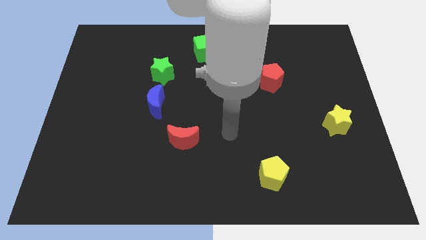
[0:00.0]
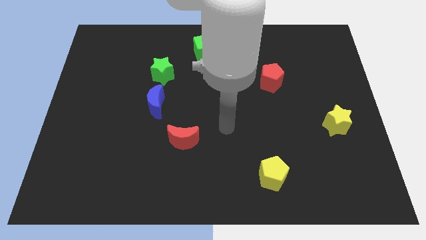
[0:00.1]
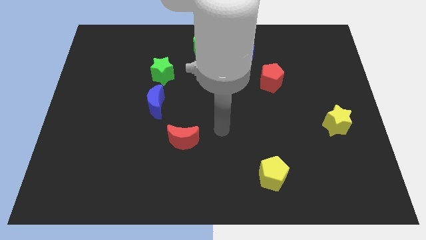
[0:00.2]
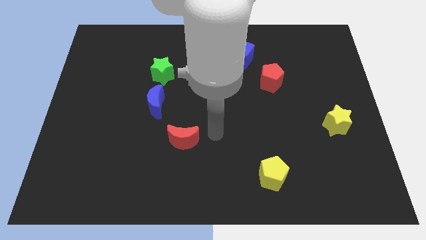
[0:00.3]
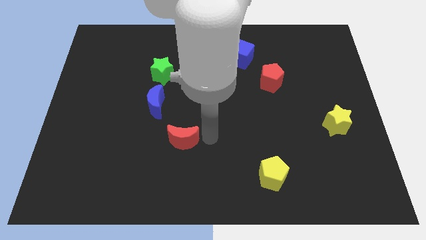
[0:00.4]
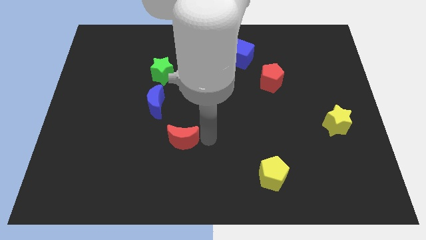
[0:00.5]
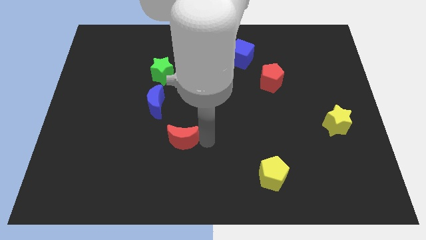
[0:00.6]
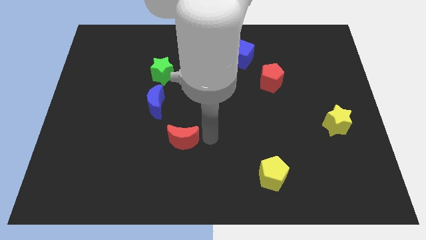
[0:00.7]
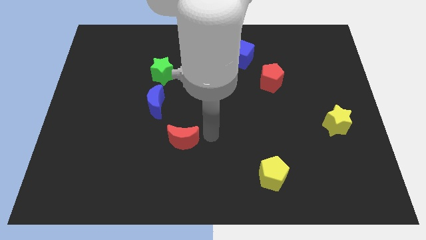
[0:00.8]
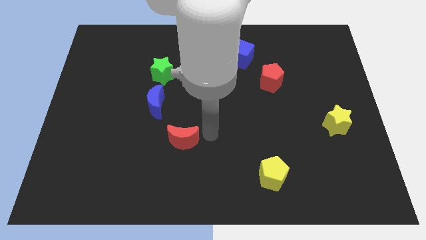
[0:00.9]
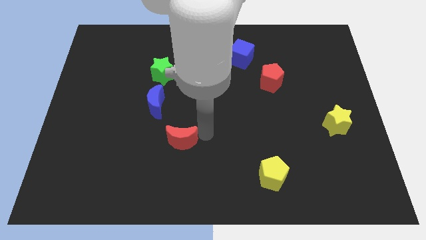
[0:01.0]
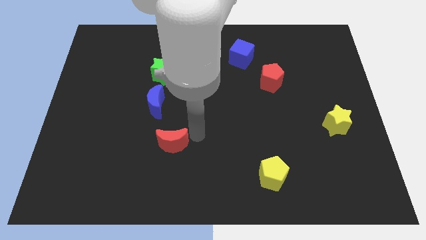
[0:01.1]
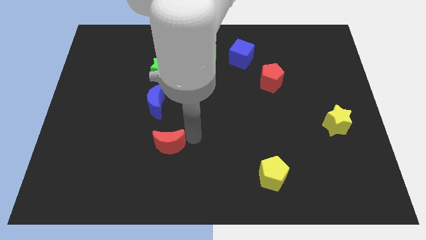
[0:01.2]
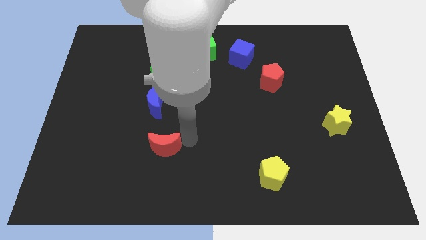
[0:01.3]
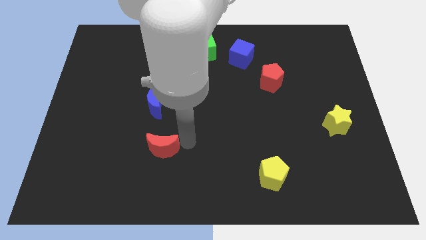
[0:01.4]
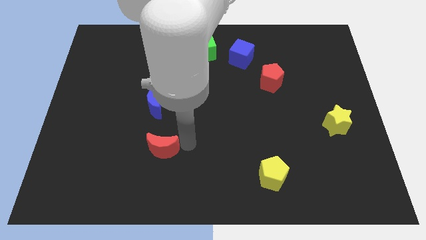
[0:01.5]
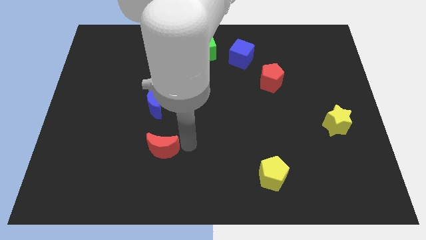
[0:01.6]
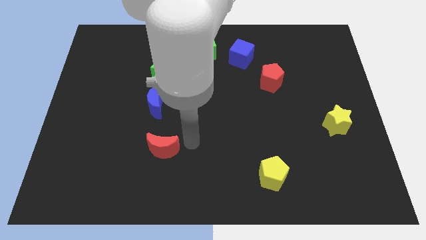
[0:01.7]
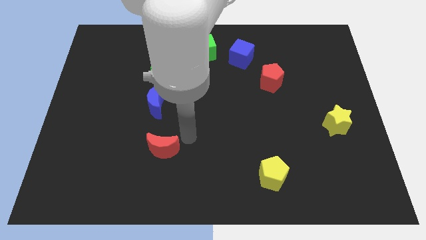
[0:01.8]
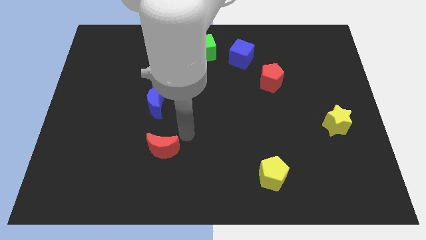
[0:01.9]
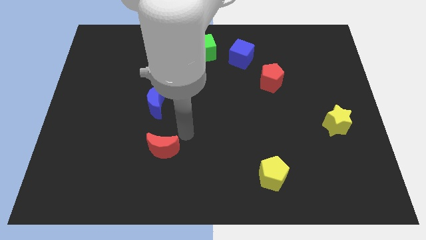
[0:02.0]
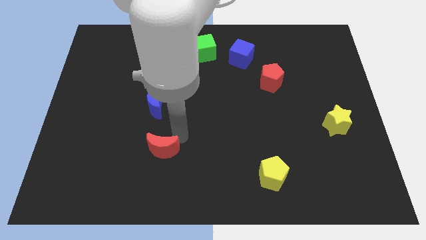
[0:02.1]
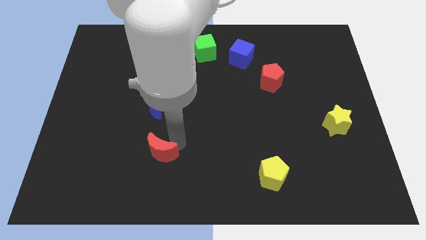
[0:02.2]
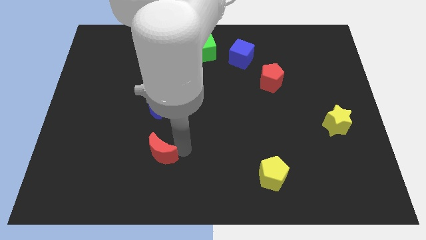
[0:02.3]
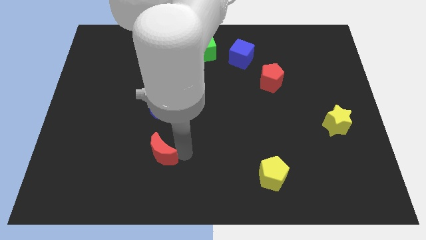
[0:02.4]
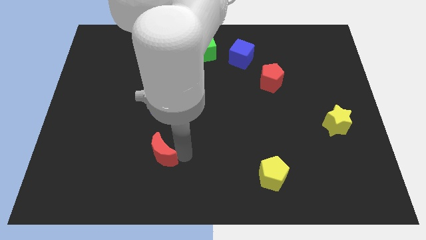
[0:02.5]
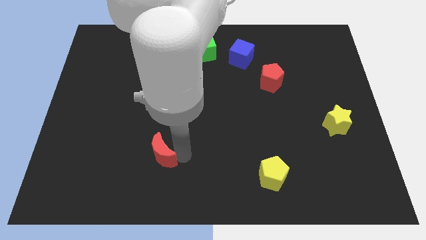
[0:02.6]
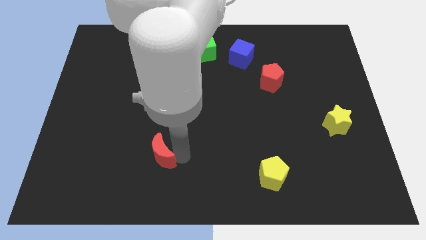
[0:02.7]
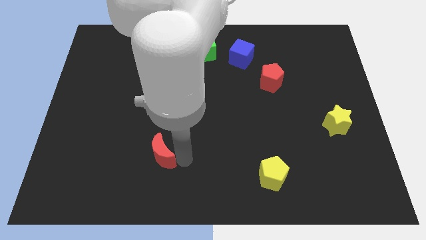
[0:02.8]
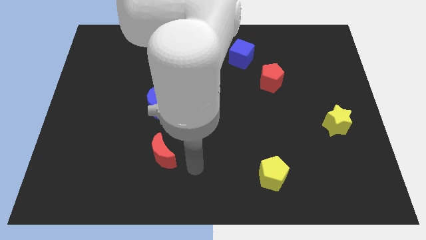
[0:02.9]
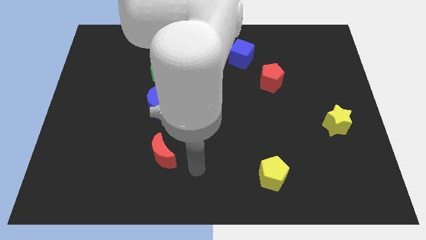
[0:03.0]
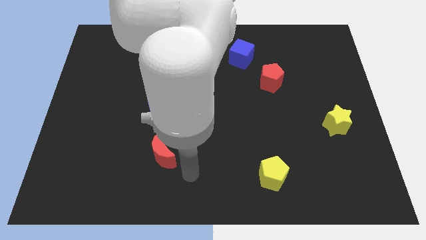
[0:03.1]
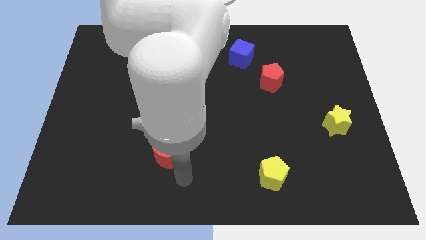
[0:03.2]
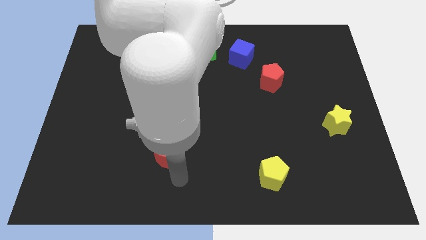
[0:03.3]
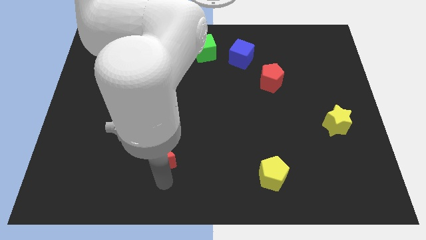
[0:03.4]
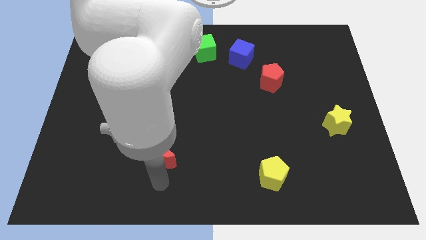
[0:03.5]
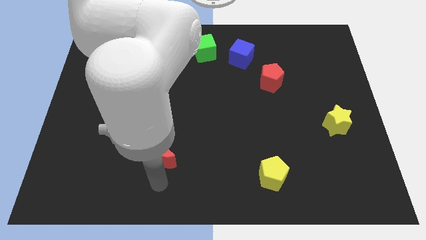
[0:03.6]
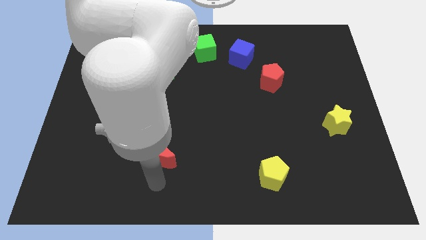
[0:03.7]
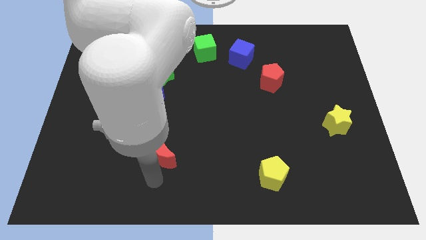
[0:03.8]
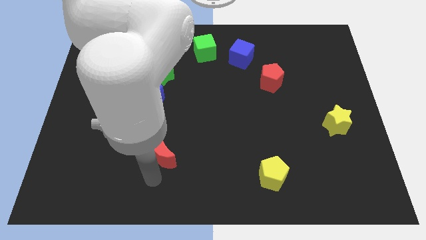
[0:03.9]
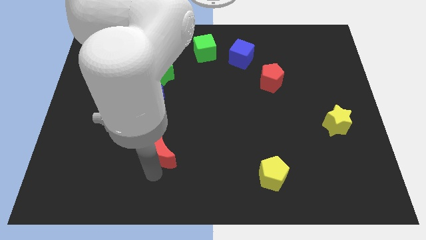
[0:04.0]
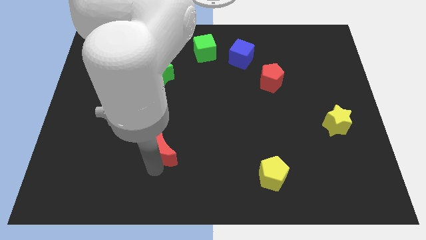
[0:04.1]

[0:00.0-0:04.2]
place the red moon vertically below the blue moon

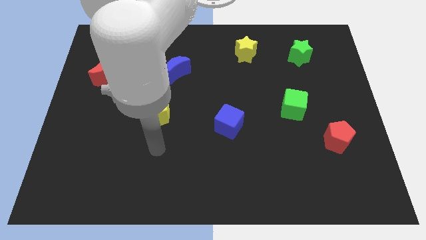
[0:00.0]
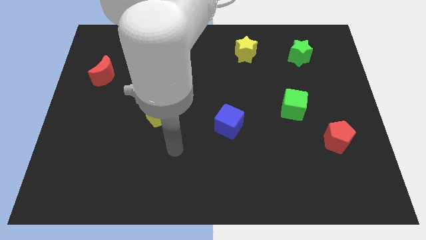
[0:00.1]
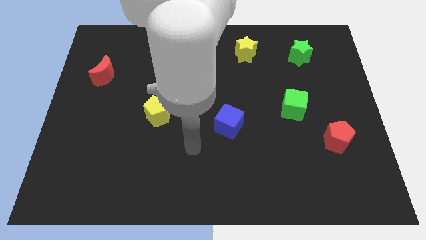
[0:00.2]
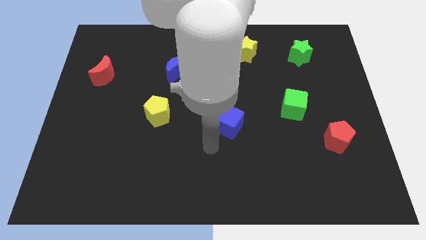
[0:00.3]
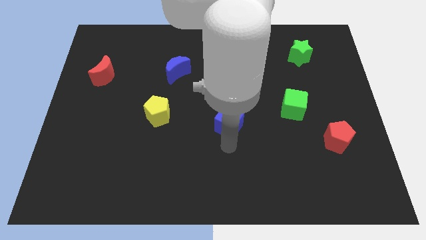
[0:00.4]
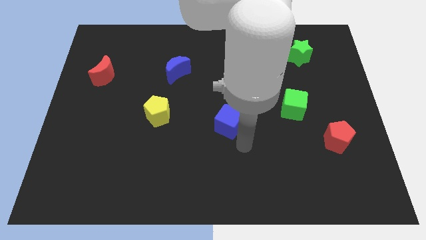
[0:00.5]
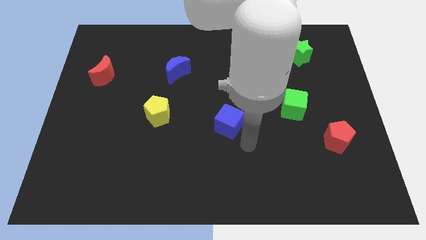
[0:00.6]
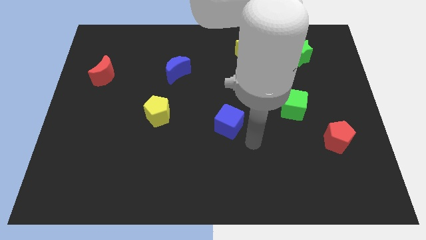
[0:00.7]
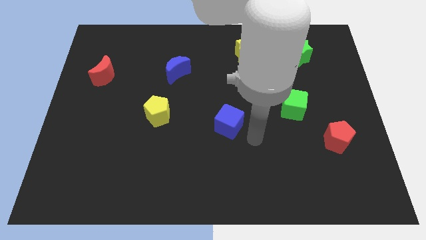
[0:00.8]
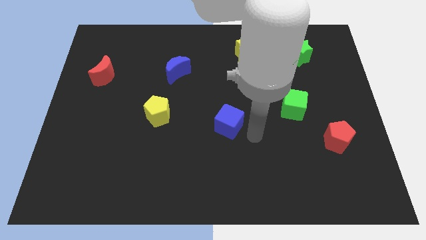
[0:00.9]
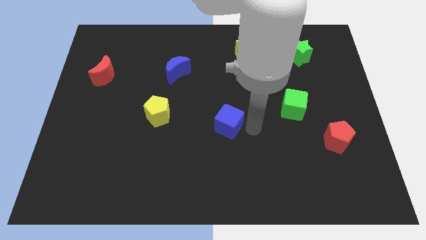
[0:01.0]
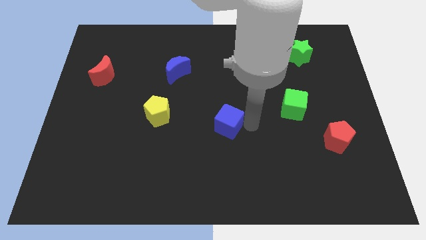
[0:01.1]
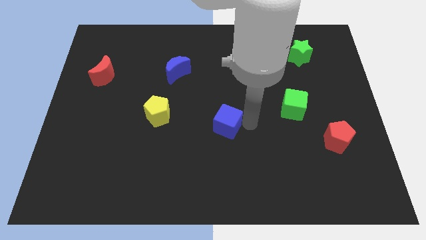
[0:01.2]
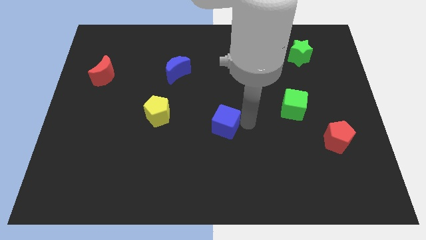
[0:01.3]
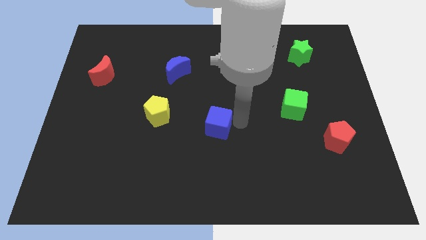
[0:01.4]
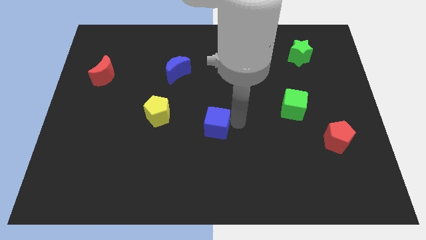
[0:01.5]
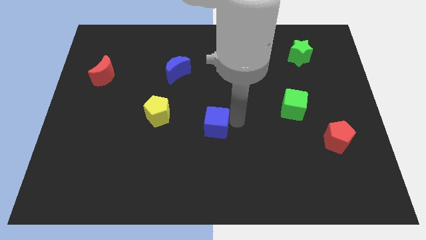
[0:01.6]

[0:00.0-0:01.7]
touch the blue cube

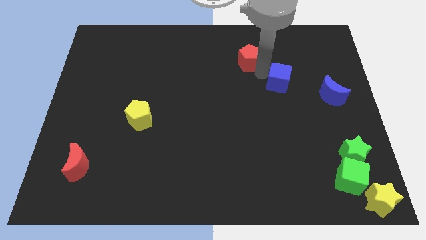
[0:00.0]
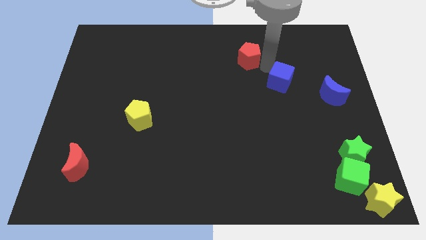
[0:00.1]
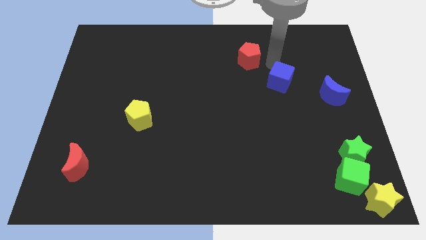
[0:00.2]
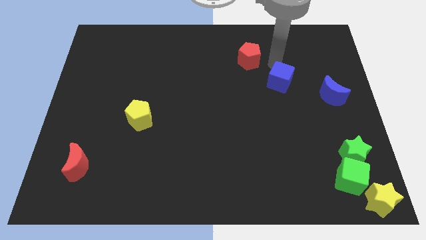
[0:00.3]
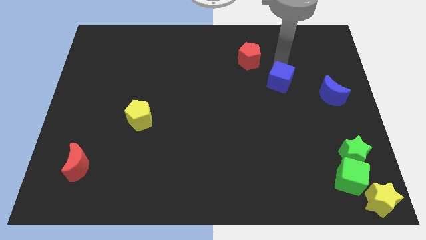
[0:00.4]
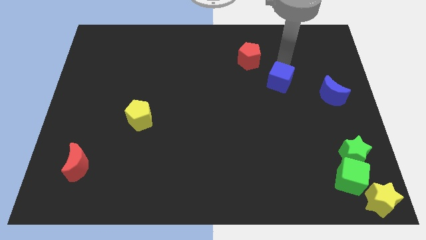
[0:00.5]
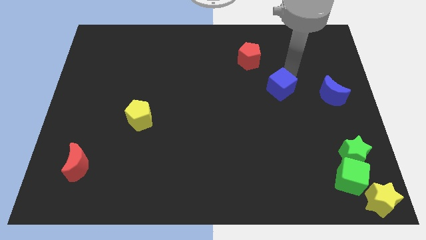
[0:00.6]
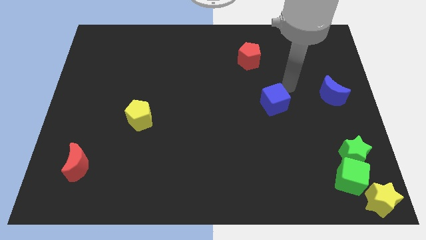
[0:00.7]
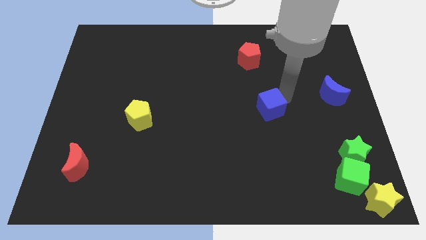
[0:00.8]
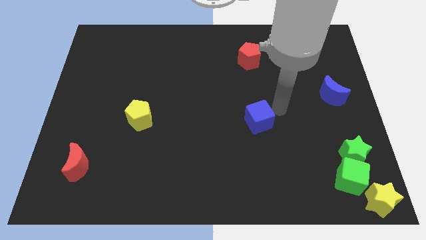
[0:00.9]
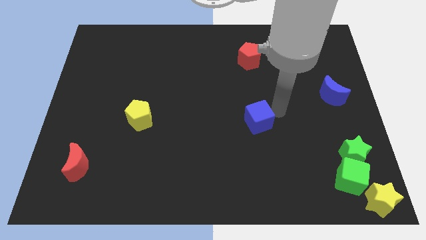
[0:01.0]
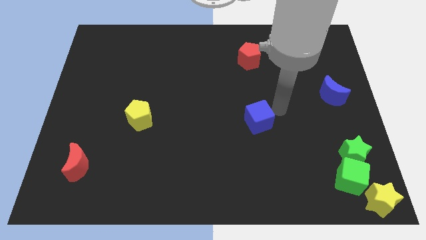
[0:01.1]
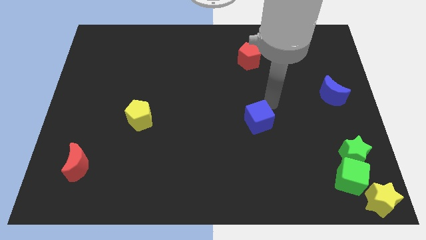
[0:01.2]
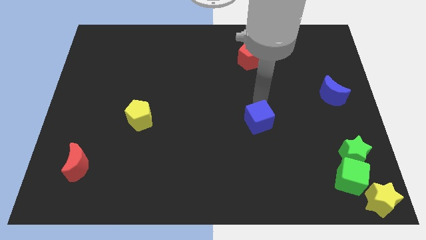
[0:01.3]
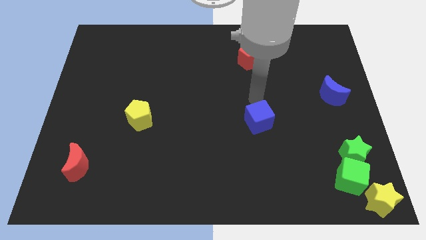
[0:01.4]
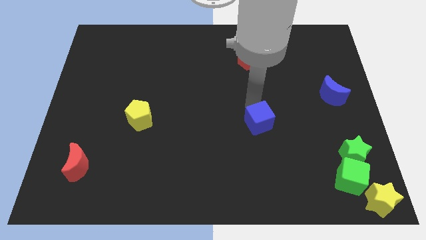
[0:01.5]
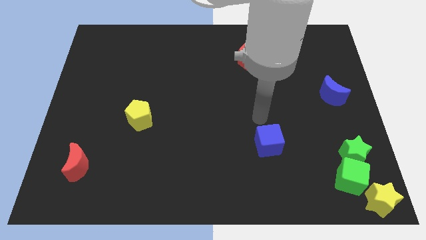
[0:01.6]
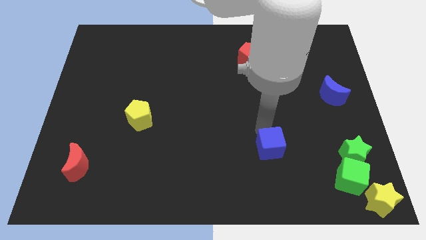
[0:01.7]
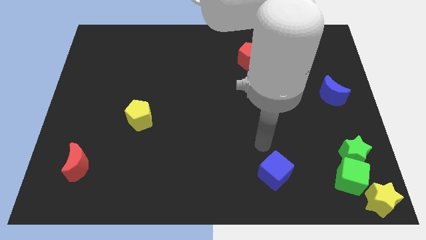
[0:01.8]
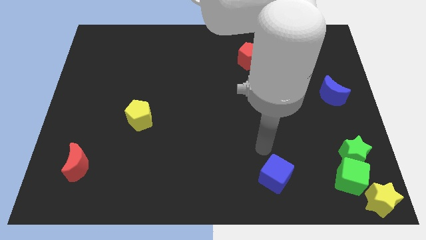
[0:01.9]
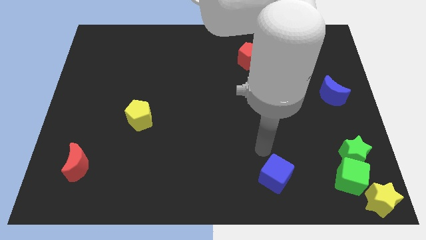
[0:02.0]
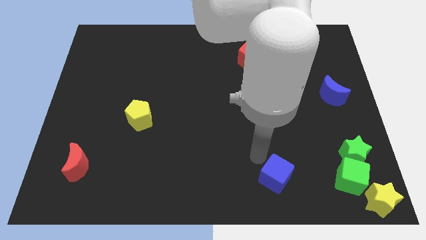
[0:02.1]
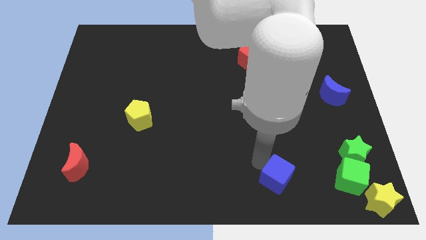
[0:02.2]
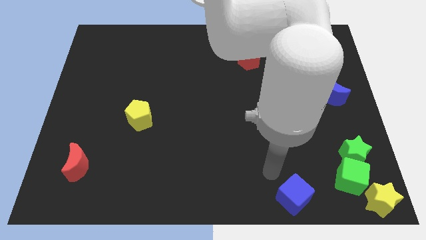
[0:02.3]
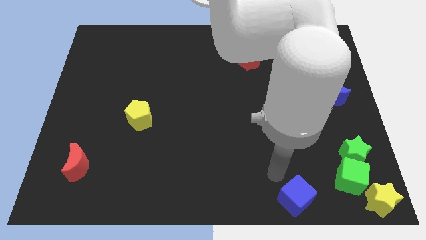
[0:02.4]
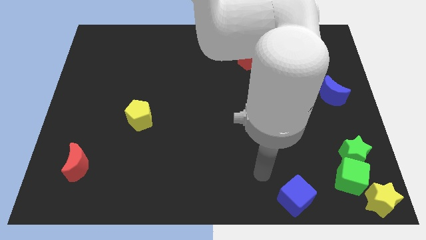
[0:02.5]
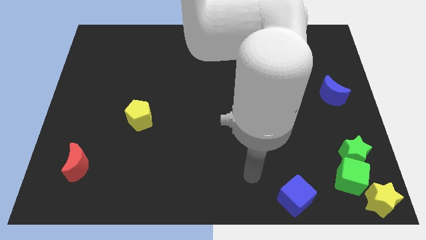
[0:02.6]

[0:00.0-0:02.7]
push blue cube towards the bottom of the board

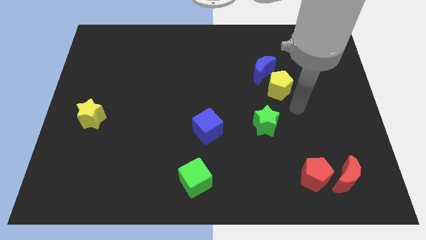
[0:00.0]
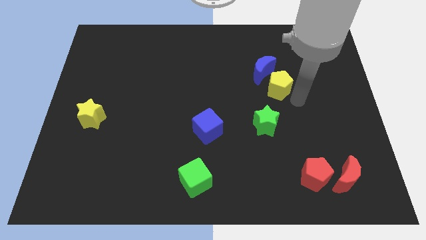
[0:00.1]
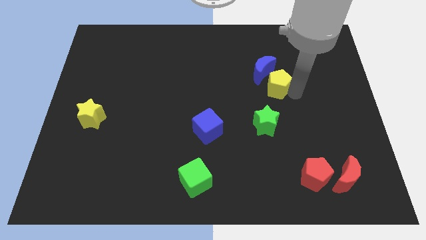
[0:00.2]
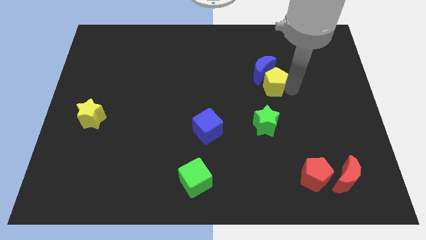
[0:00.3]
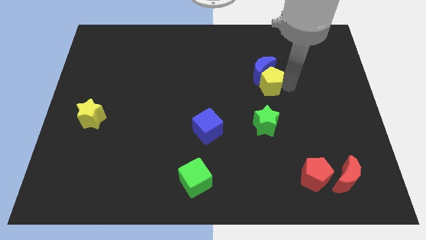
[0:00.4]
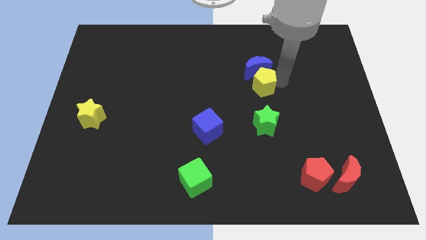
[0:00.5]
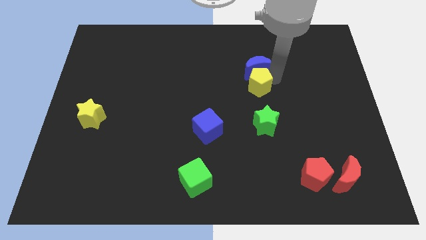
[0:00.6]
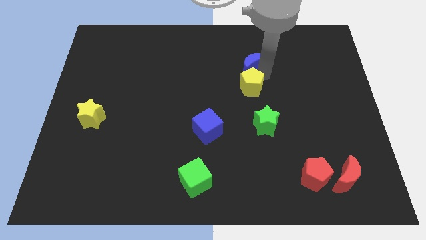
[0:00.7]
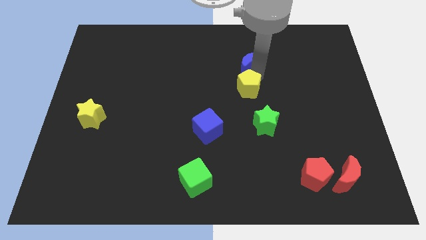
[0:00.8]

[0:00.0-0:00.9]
push the yellow pentagon into blue crescent
